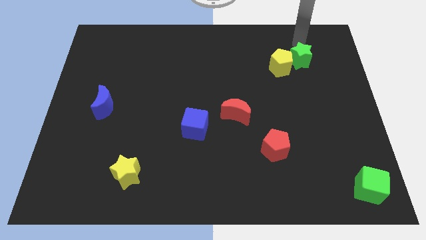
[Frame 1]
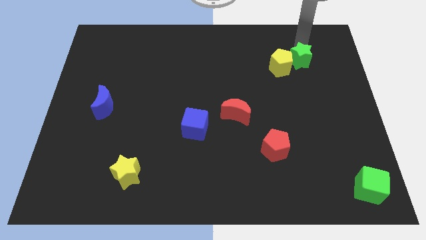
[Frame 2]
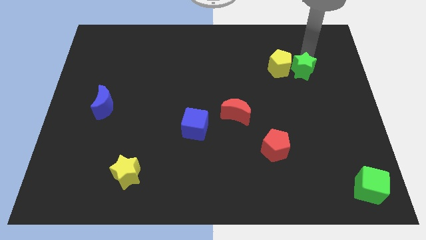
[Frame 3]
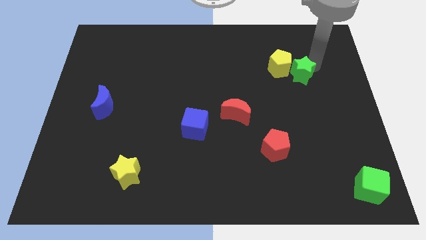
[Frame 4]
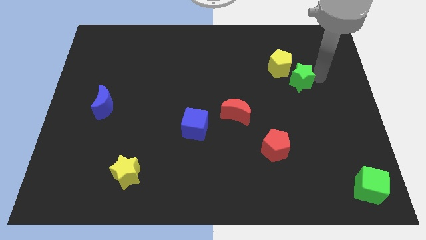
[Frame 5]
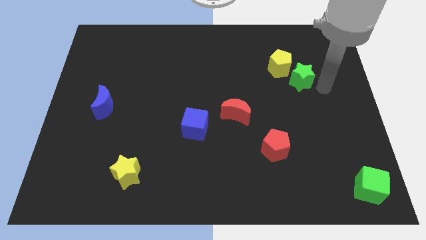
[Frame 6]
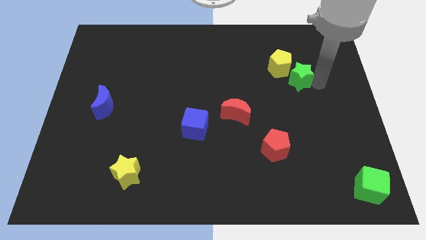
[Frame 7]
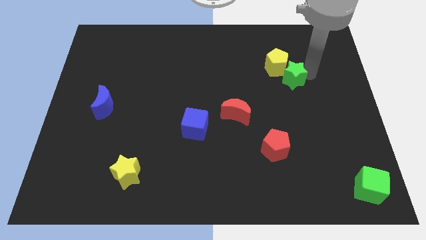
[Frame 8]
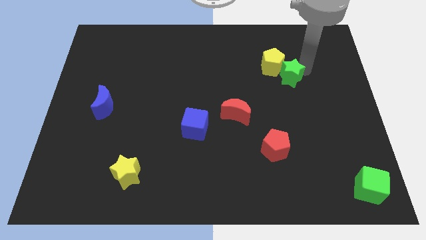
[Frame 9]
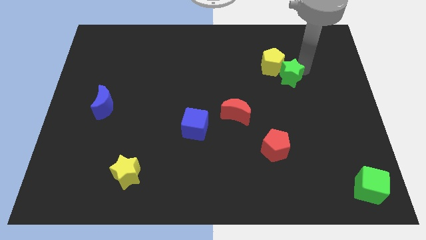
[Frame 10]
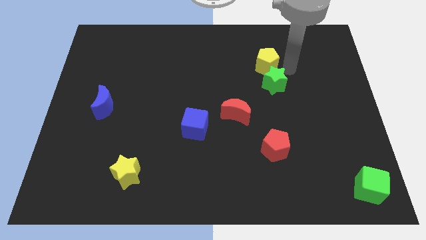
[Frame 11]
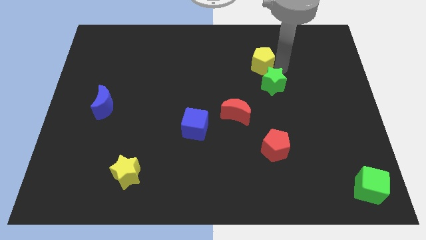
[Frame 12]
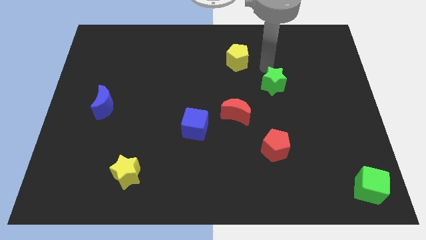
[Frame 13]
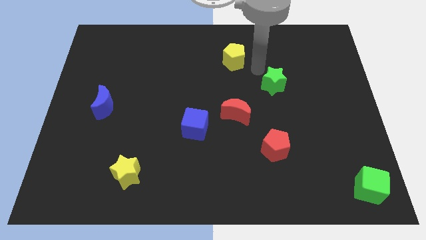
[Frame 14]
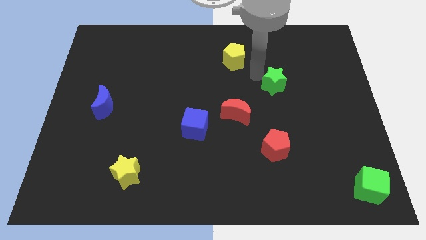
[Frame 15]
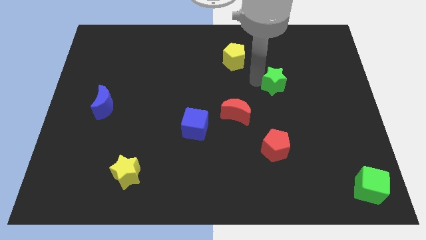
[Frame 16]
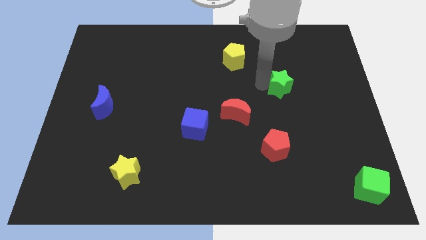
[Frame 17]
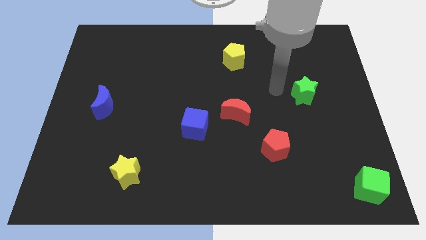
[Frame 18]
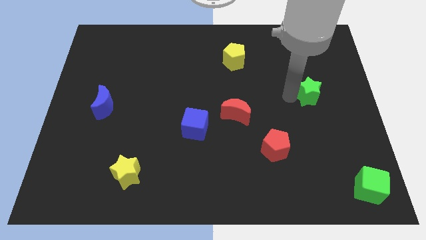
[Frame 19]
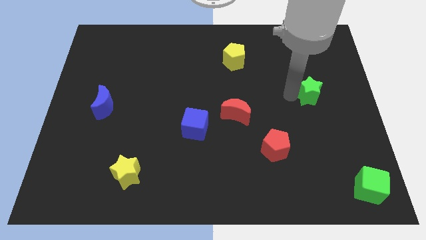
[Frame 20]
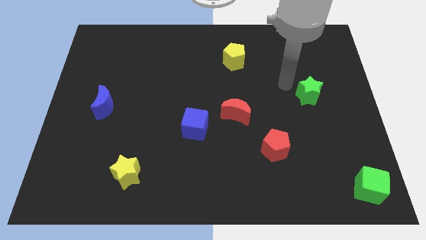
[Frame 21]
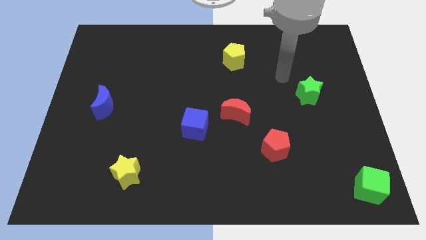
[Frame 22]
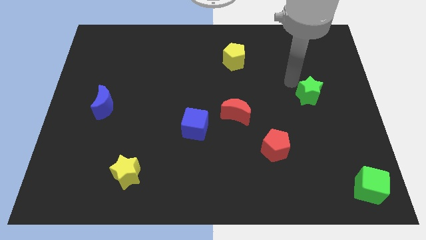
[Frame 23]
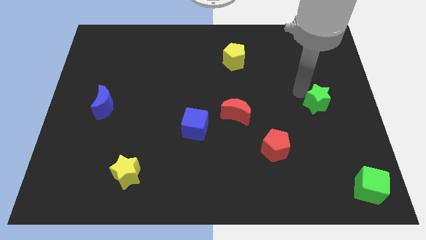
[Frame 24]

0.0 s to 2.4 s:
push the yellow pentagon using the green star

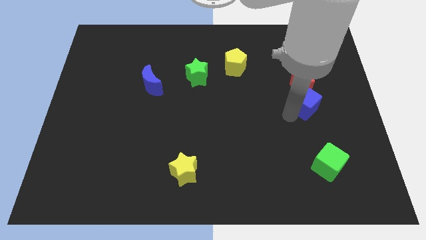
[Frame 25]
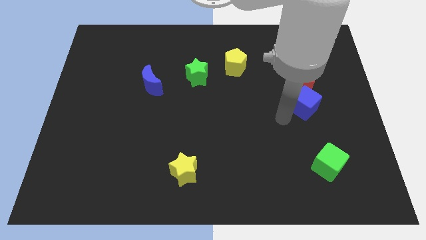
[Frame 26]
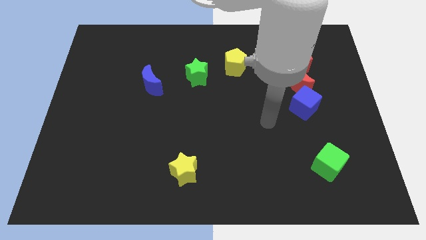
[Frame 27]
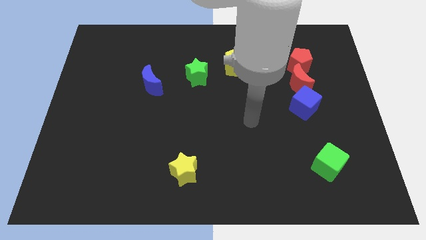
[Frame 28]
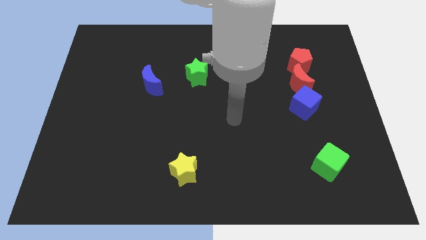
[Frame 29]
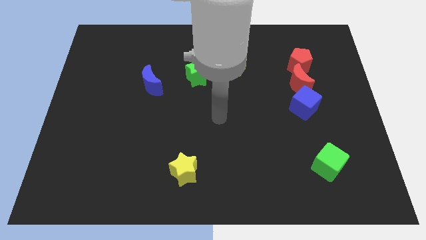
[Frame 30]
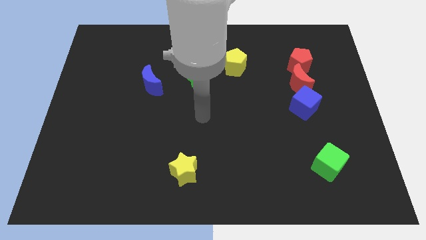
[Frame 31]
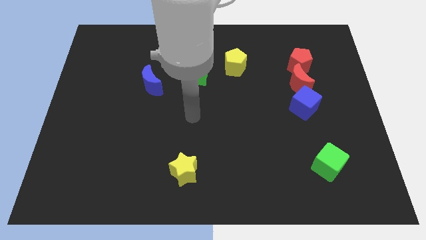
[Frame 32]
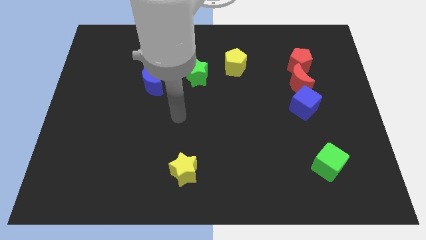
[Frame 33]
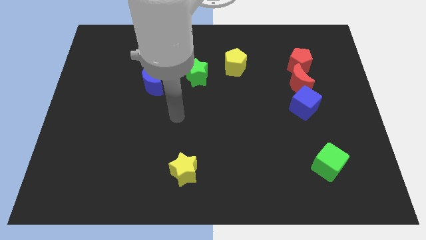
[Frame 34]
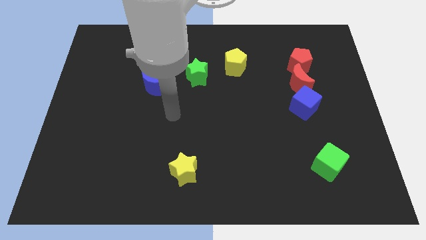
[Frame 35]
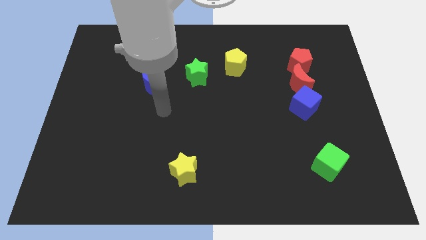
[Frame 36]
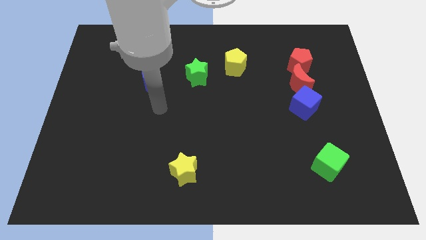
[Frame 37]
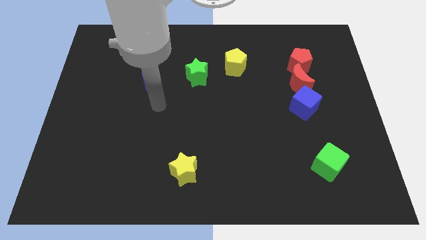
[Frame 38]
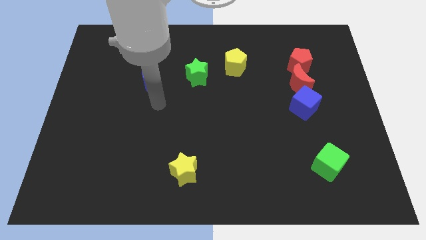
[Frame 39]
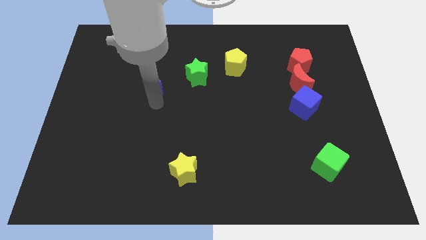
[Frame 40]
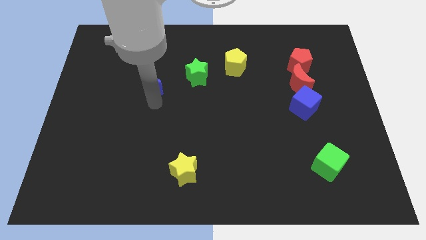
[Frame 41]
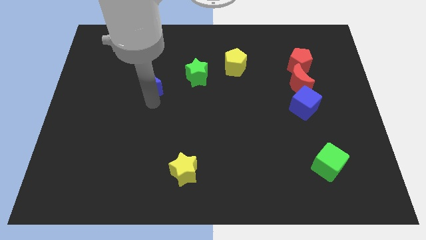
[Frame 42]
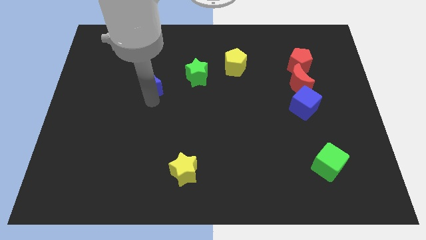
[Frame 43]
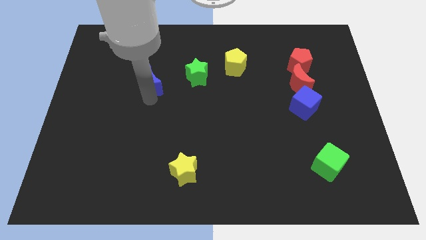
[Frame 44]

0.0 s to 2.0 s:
move the arm from blue cube to blue crescent

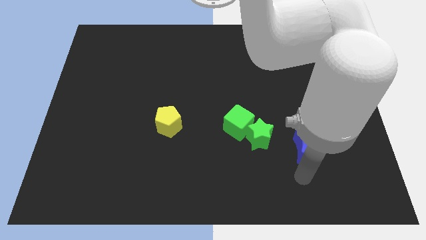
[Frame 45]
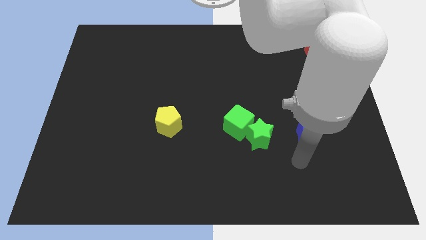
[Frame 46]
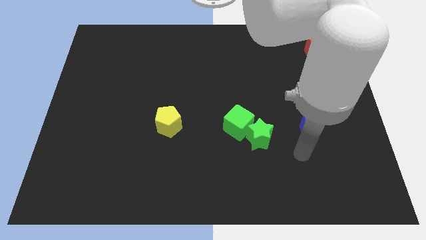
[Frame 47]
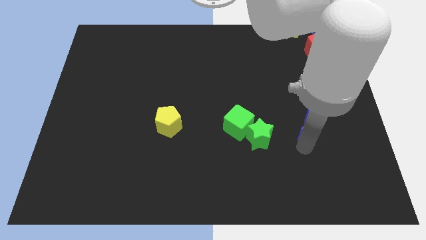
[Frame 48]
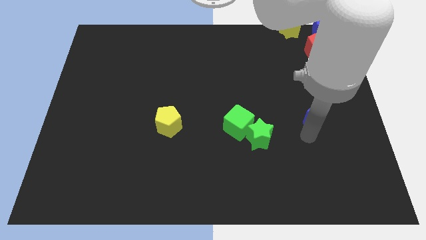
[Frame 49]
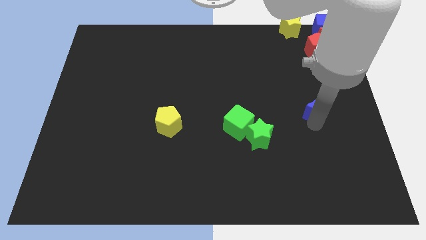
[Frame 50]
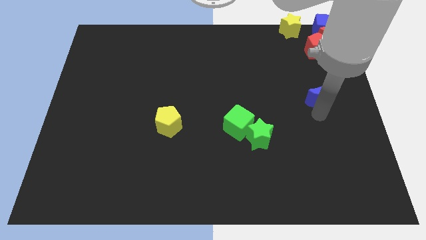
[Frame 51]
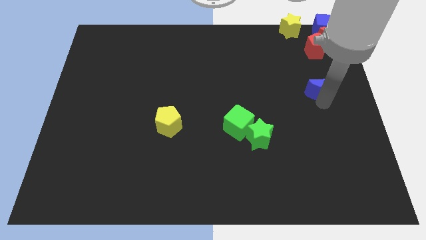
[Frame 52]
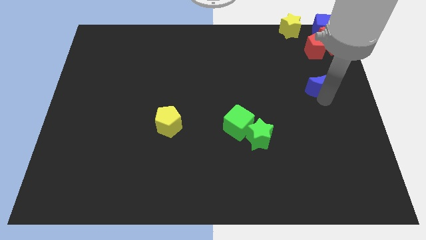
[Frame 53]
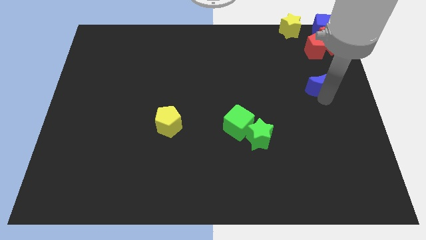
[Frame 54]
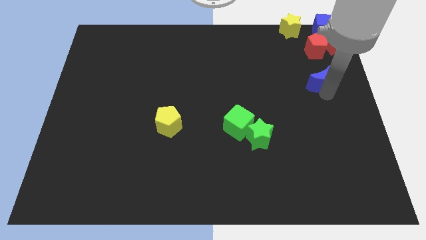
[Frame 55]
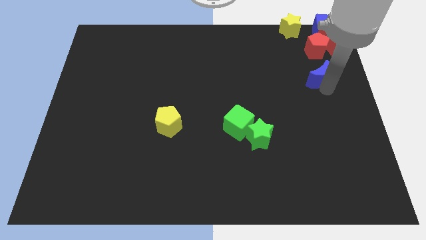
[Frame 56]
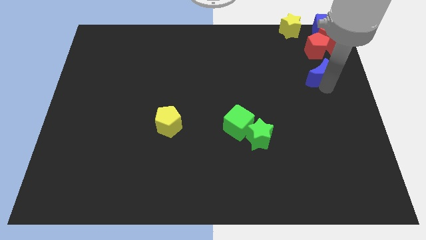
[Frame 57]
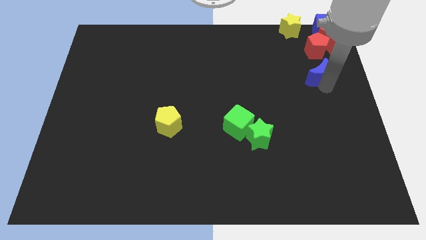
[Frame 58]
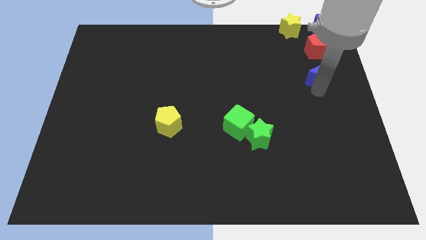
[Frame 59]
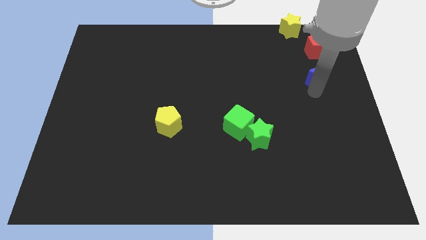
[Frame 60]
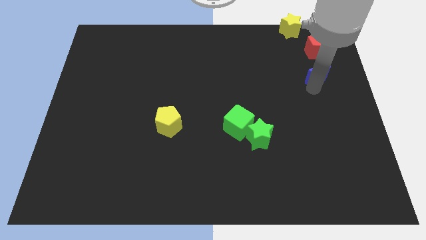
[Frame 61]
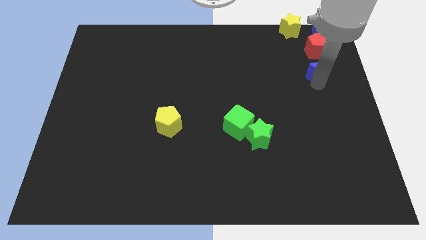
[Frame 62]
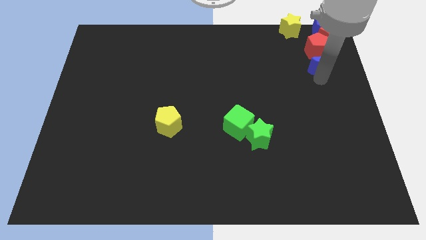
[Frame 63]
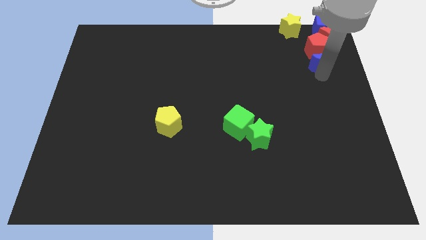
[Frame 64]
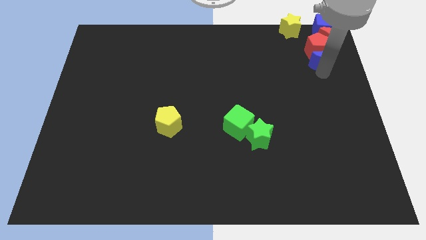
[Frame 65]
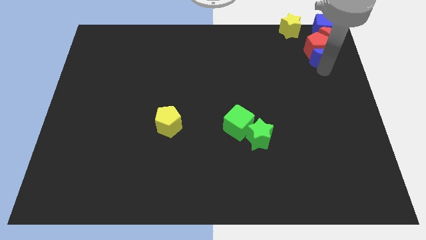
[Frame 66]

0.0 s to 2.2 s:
place the blue crescent diagonal to the green star

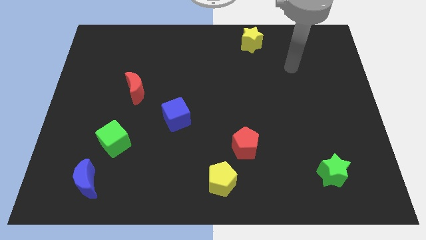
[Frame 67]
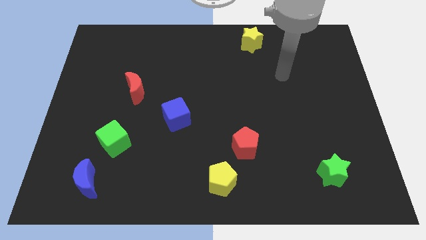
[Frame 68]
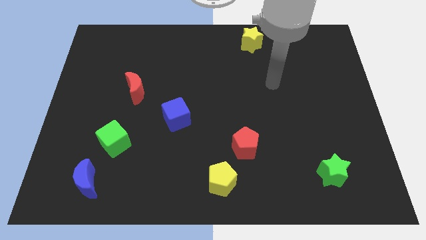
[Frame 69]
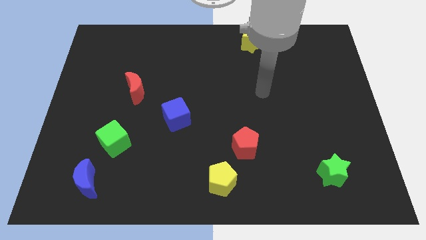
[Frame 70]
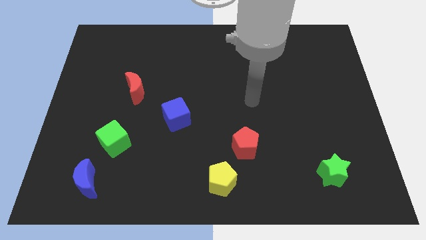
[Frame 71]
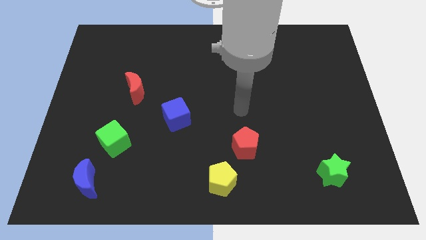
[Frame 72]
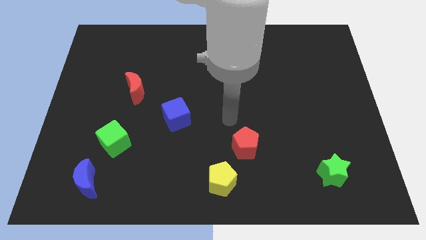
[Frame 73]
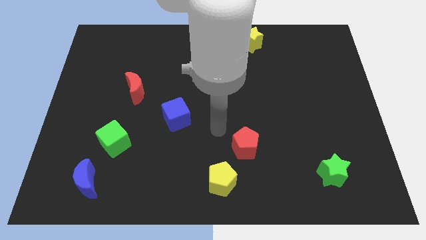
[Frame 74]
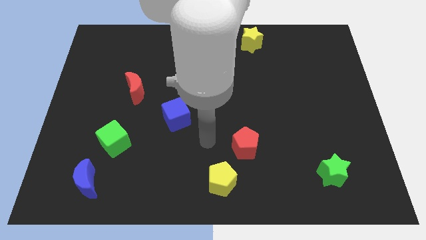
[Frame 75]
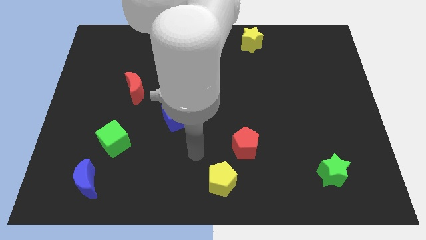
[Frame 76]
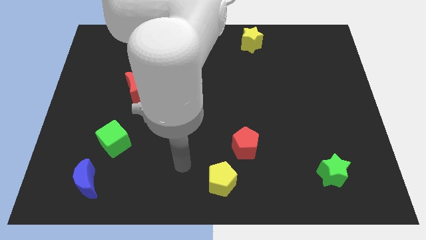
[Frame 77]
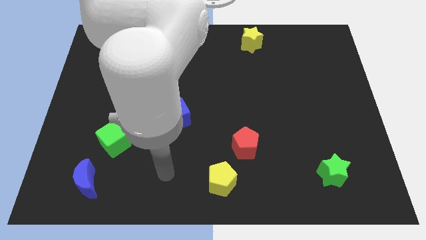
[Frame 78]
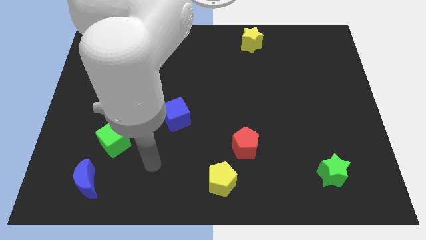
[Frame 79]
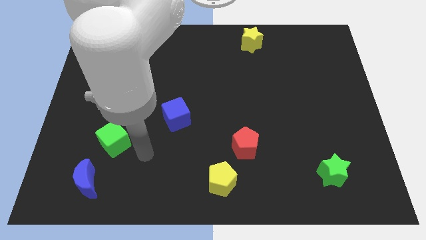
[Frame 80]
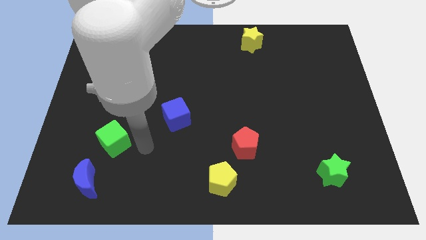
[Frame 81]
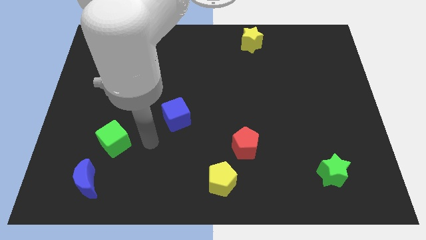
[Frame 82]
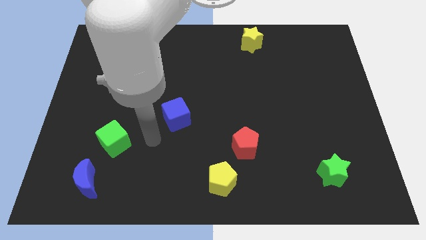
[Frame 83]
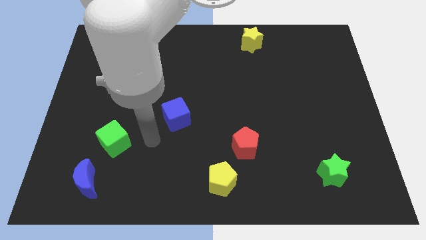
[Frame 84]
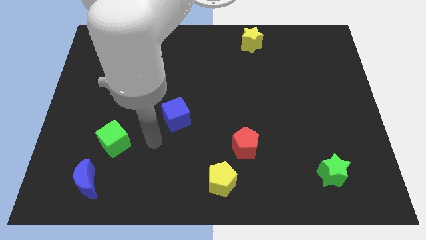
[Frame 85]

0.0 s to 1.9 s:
point your arm between green and blue cubes

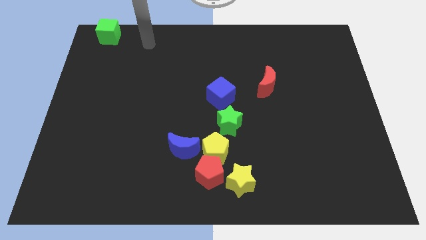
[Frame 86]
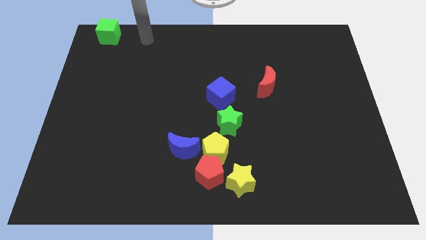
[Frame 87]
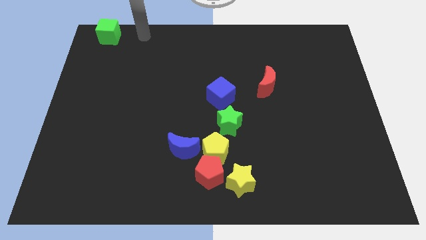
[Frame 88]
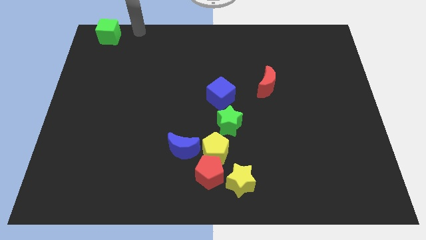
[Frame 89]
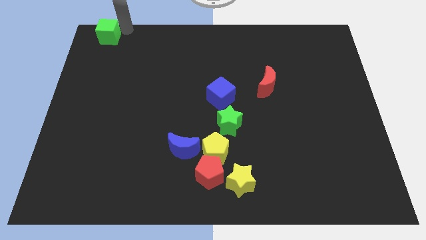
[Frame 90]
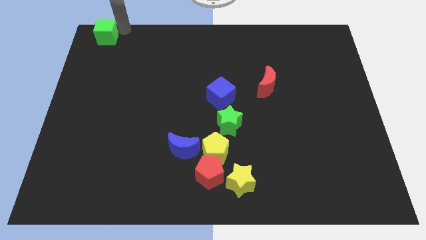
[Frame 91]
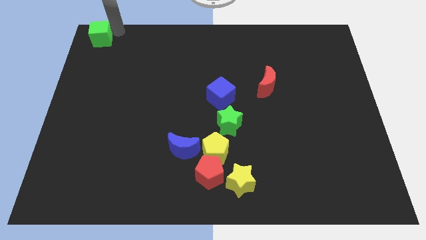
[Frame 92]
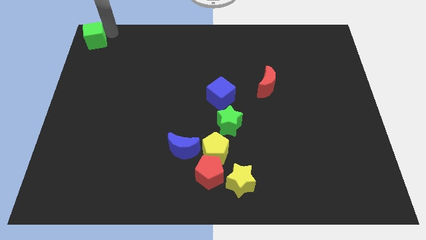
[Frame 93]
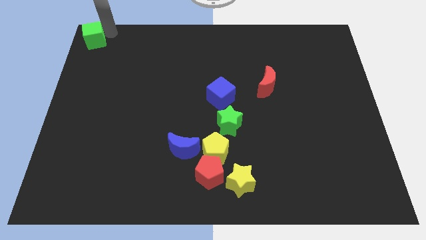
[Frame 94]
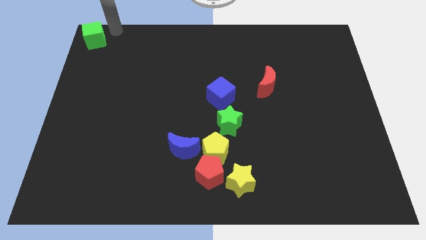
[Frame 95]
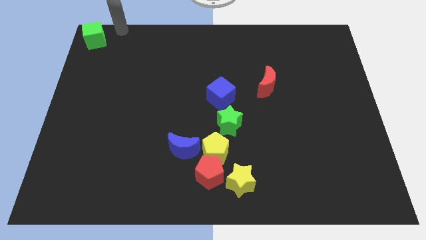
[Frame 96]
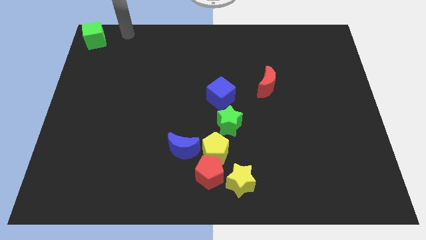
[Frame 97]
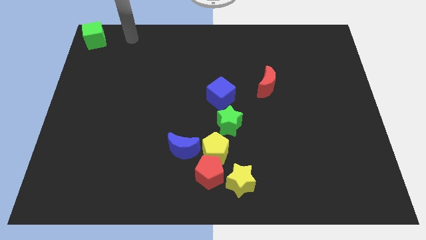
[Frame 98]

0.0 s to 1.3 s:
move green cube to left
